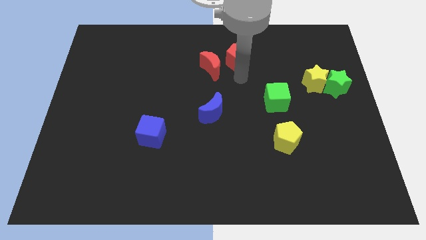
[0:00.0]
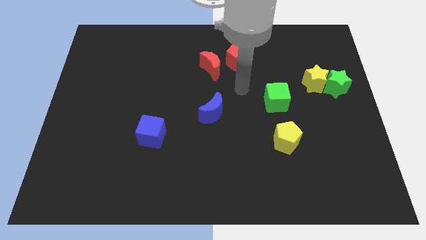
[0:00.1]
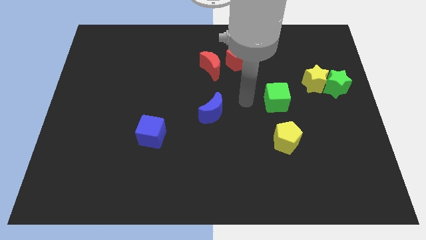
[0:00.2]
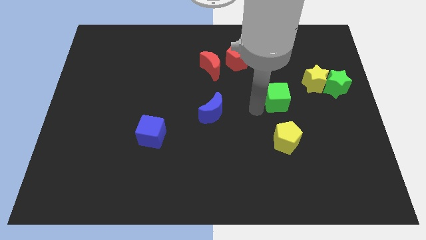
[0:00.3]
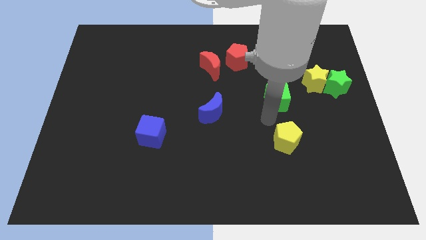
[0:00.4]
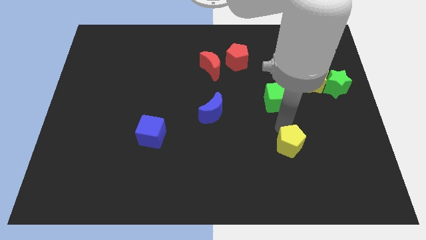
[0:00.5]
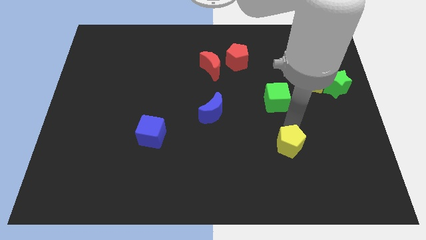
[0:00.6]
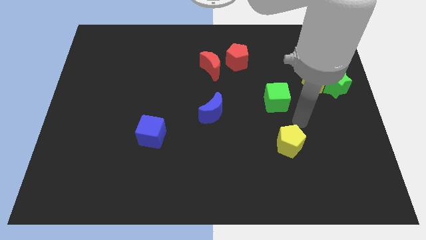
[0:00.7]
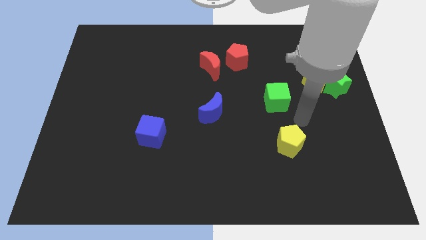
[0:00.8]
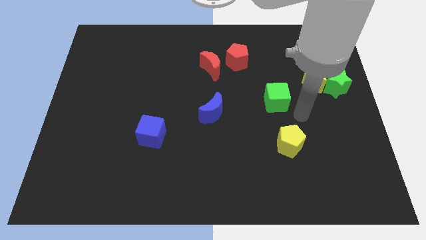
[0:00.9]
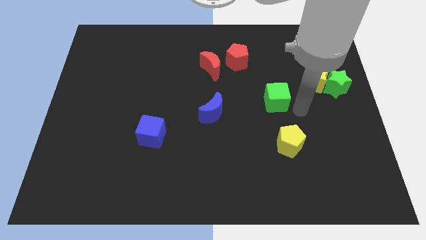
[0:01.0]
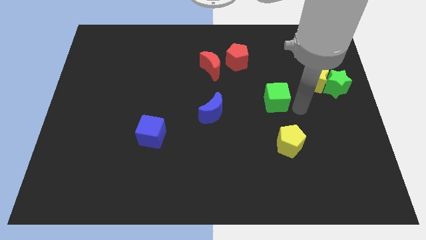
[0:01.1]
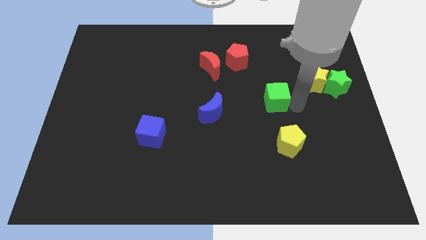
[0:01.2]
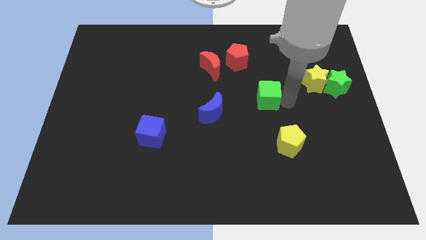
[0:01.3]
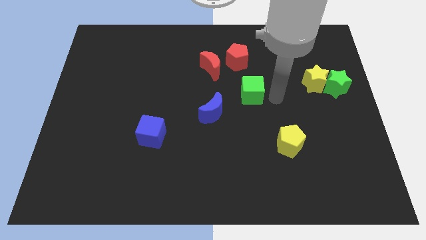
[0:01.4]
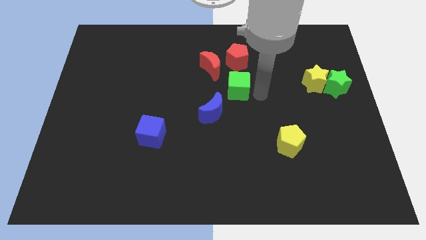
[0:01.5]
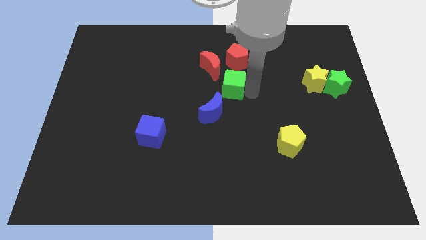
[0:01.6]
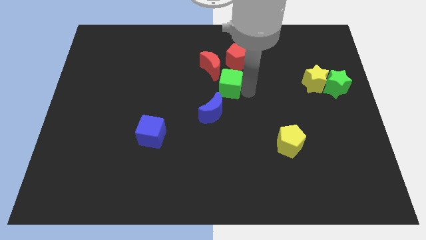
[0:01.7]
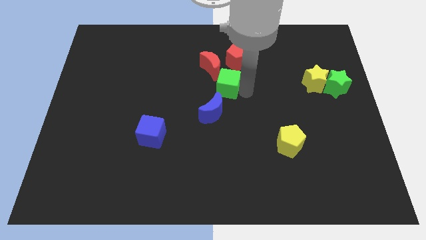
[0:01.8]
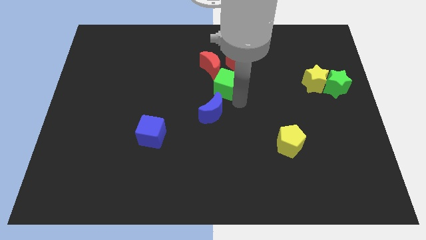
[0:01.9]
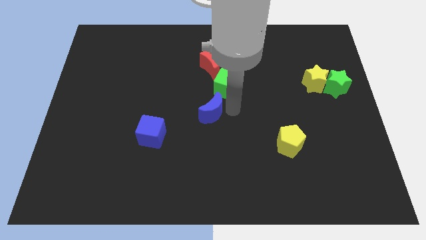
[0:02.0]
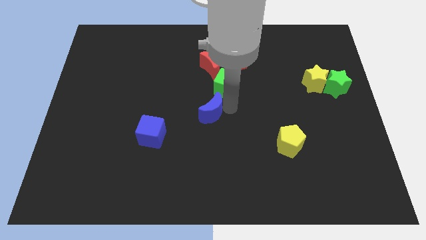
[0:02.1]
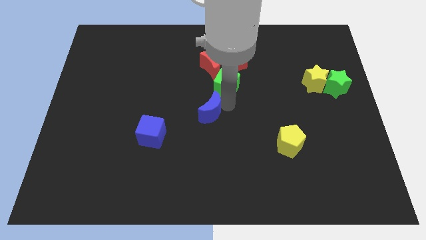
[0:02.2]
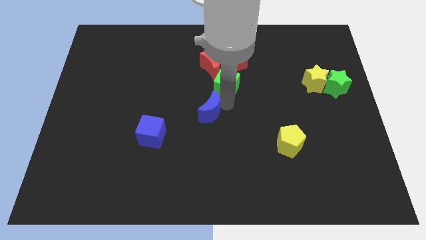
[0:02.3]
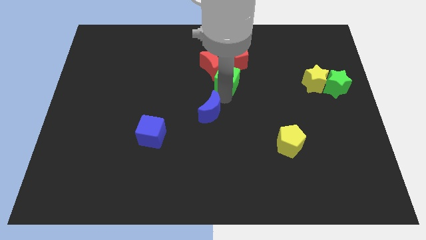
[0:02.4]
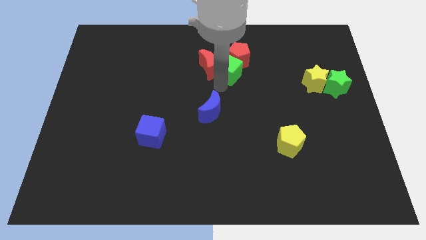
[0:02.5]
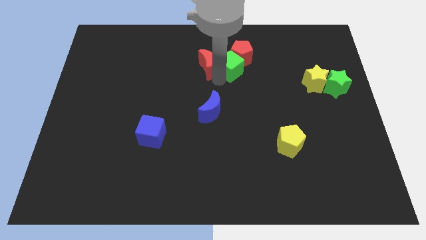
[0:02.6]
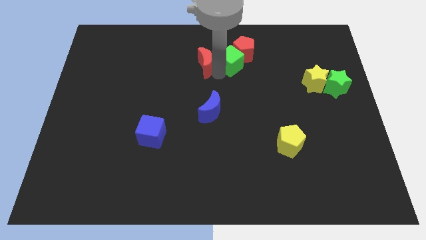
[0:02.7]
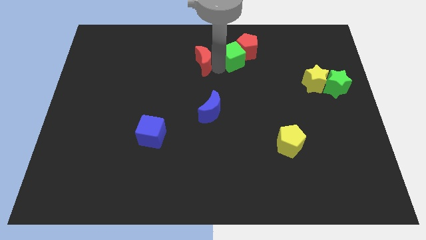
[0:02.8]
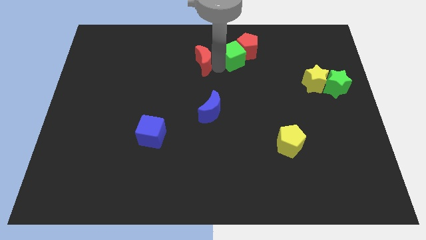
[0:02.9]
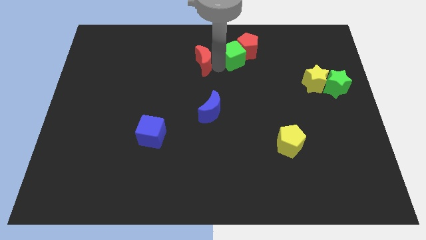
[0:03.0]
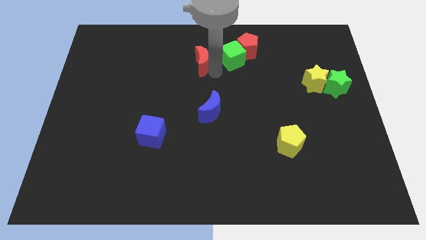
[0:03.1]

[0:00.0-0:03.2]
put green cube in between the red blocks

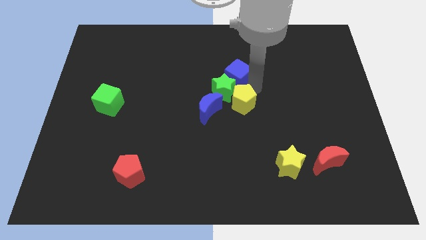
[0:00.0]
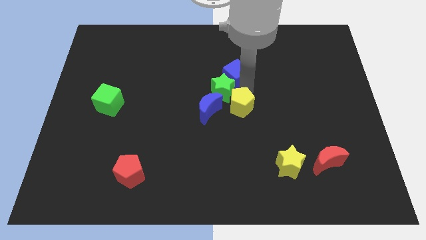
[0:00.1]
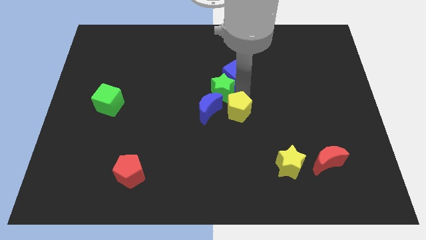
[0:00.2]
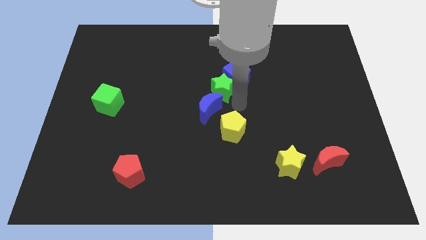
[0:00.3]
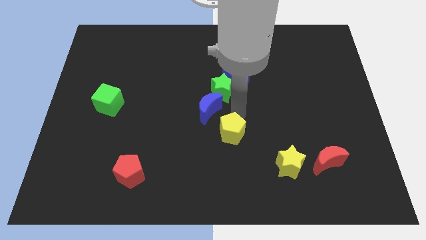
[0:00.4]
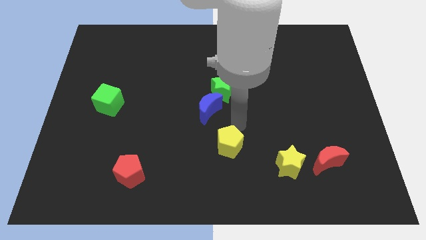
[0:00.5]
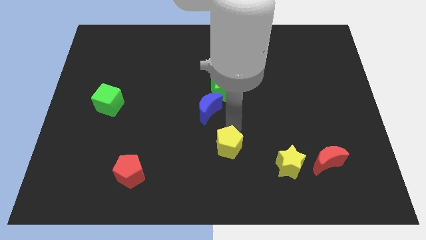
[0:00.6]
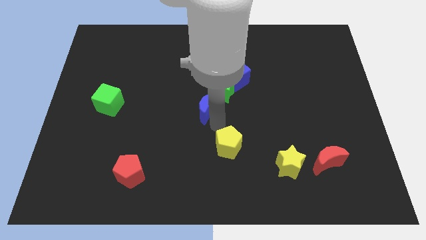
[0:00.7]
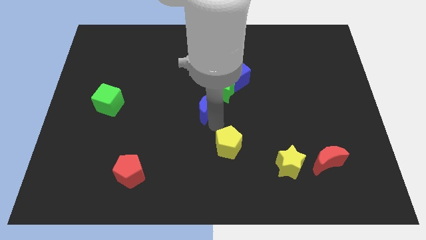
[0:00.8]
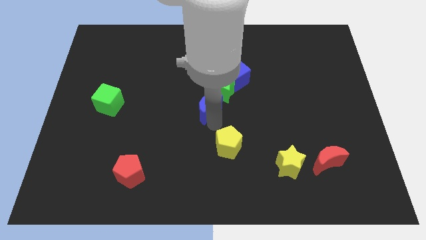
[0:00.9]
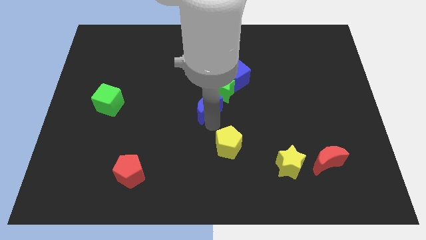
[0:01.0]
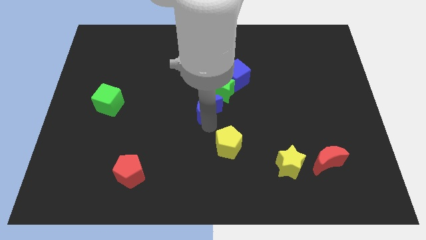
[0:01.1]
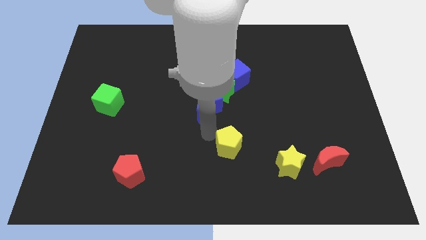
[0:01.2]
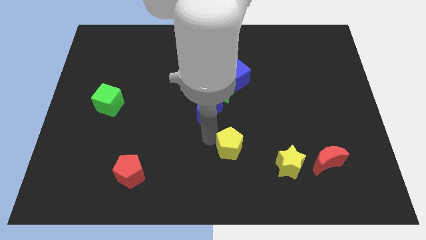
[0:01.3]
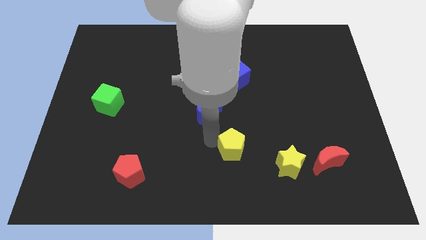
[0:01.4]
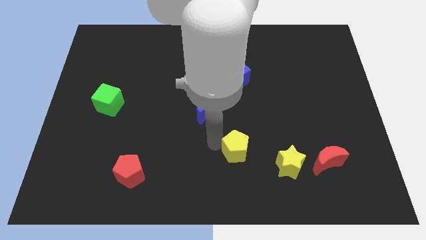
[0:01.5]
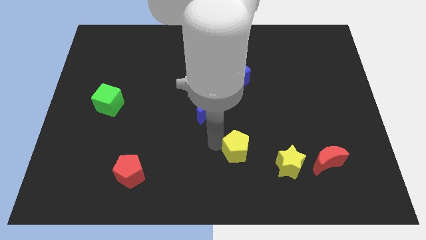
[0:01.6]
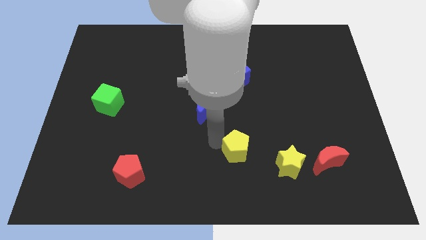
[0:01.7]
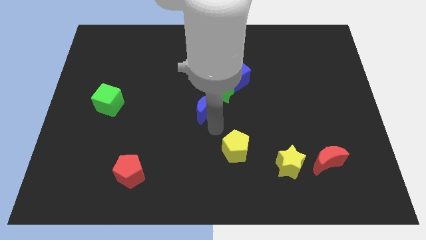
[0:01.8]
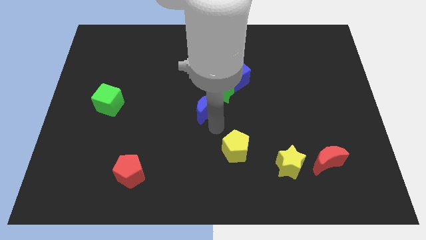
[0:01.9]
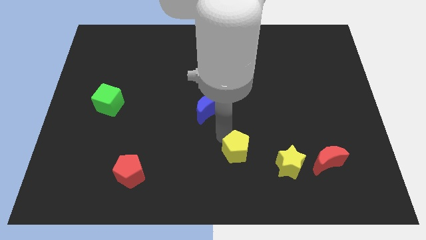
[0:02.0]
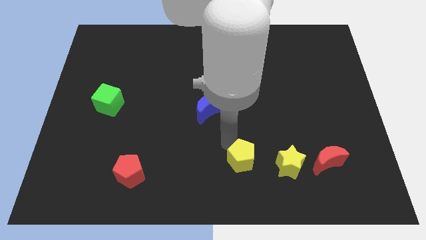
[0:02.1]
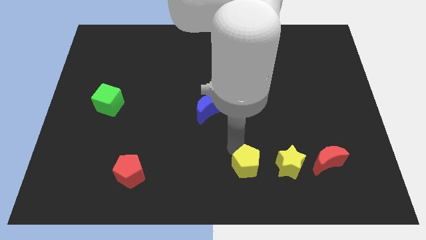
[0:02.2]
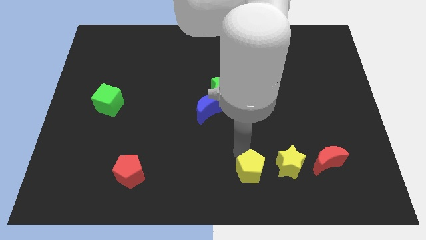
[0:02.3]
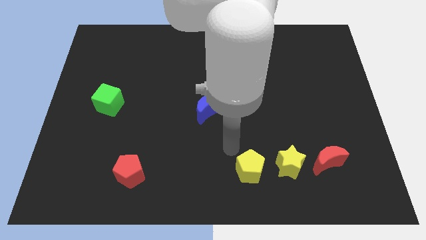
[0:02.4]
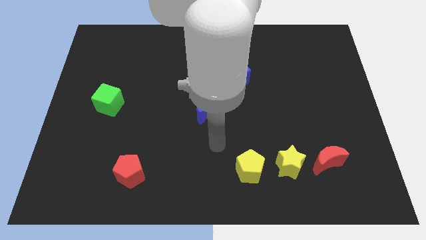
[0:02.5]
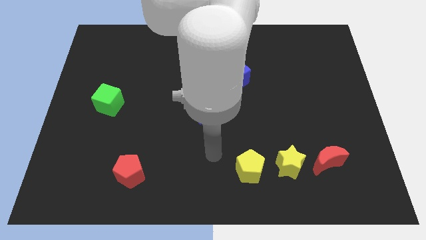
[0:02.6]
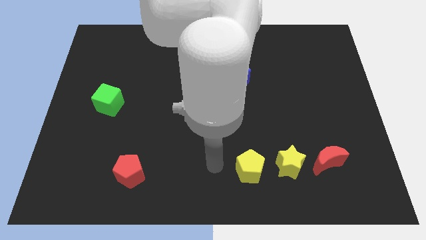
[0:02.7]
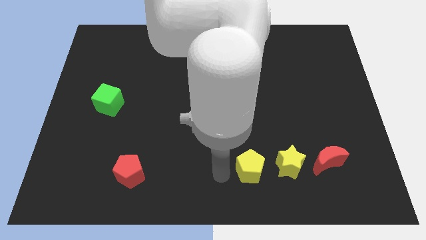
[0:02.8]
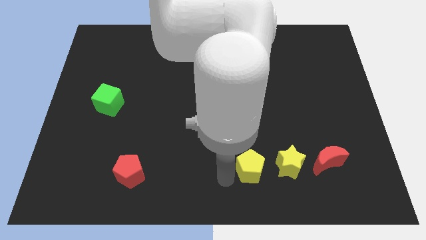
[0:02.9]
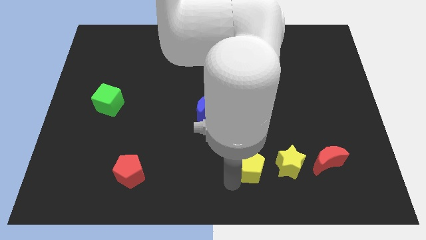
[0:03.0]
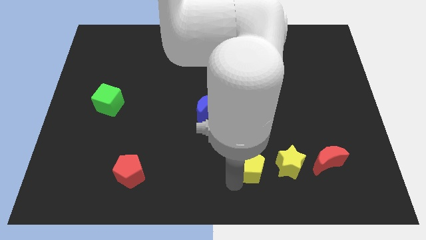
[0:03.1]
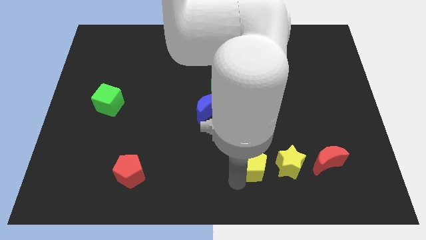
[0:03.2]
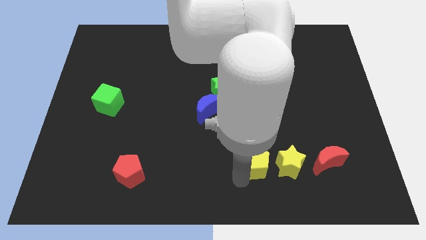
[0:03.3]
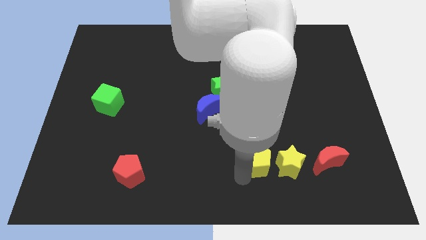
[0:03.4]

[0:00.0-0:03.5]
push the yellow pentagon to the left side of the yellow star

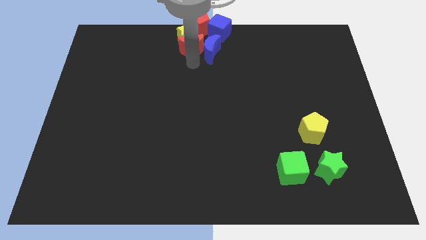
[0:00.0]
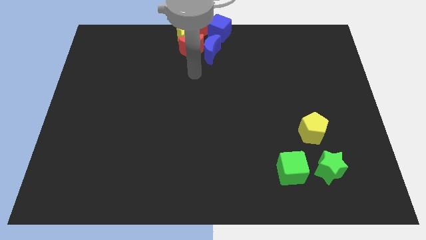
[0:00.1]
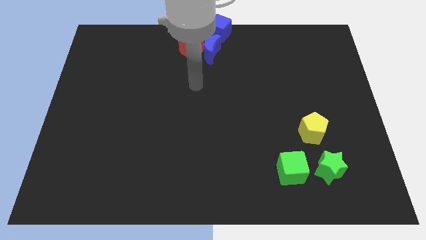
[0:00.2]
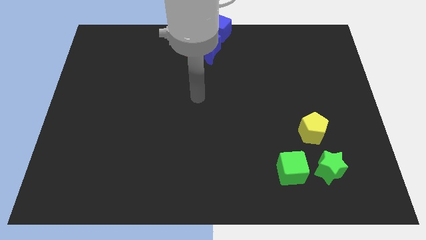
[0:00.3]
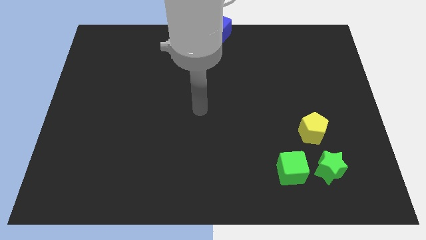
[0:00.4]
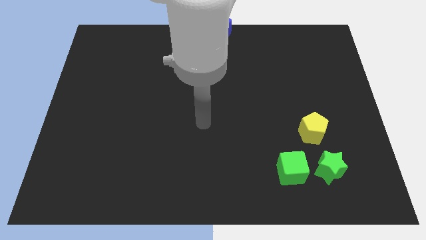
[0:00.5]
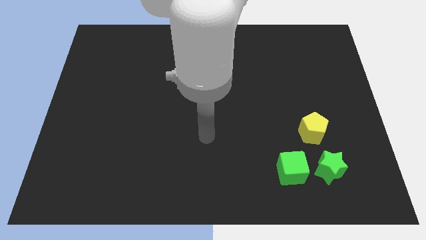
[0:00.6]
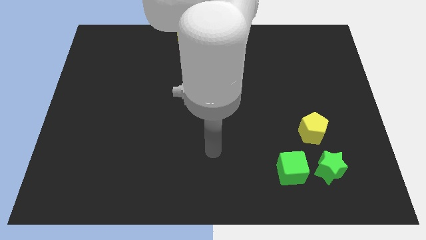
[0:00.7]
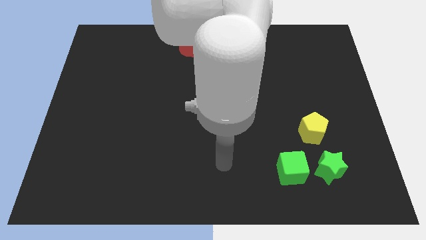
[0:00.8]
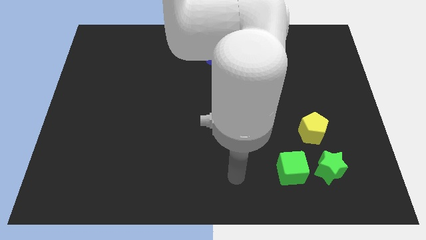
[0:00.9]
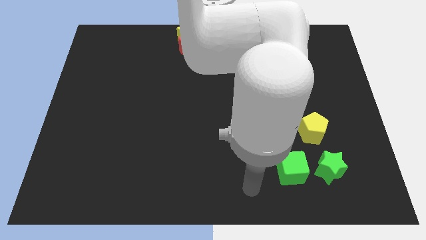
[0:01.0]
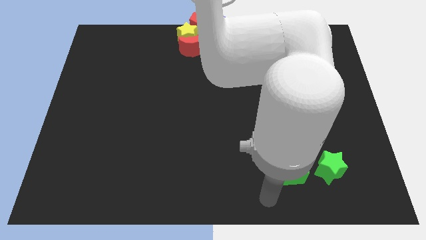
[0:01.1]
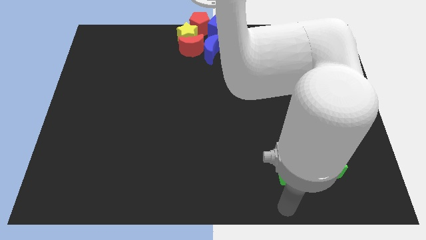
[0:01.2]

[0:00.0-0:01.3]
point your arm at the bottom of the green cube

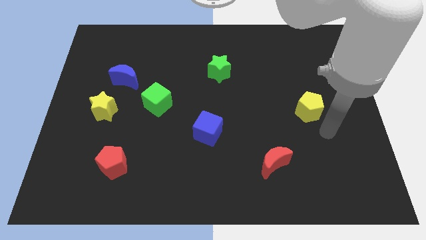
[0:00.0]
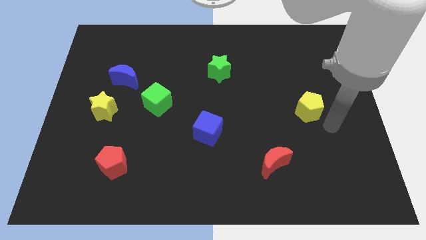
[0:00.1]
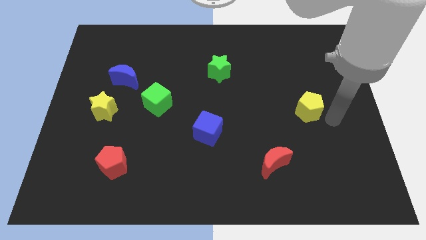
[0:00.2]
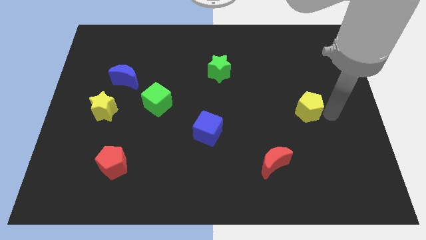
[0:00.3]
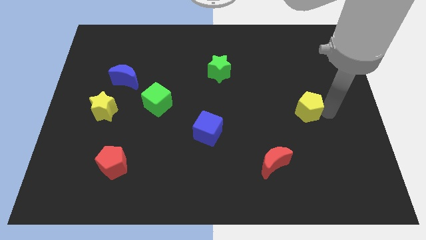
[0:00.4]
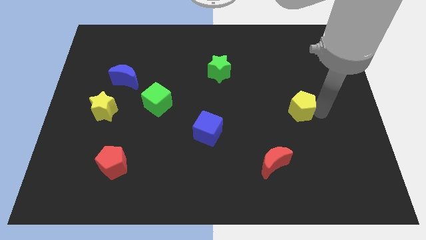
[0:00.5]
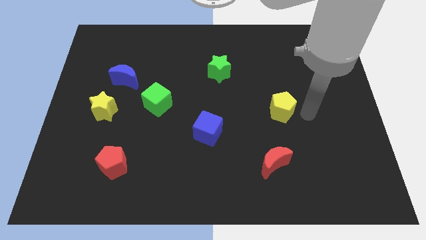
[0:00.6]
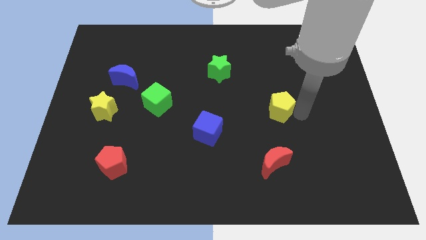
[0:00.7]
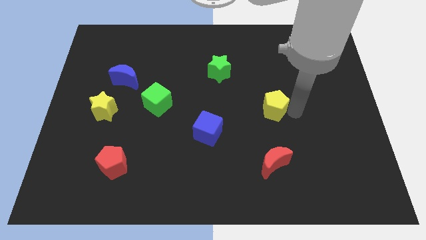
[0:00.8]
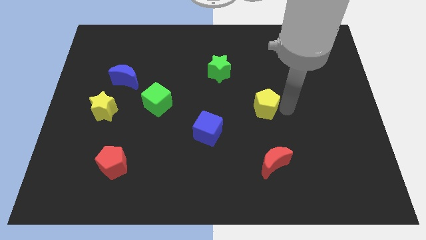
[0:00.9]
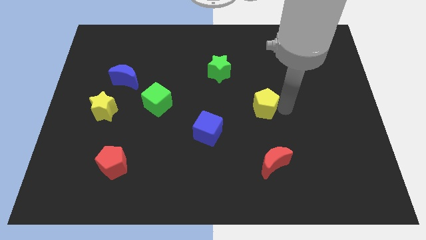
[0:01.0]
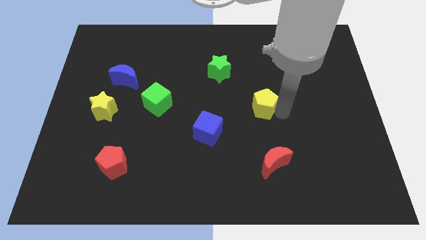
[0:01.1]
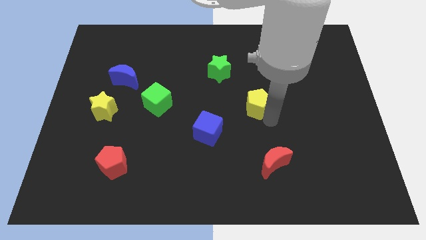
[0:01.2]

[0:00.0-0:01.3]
slide the yellow pentagon towards the center

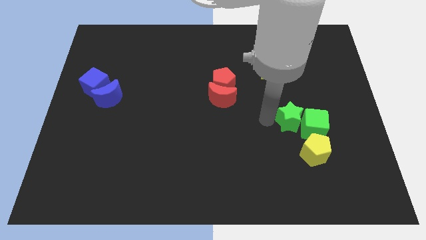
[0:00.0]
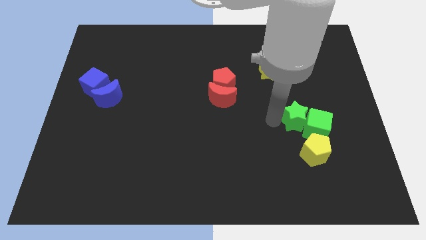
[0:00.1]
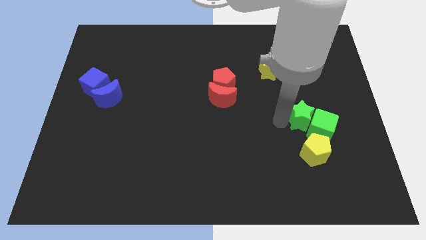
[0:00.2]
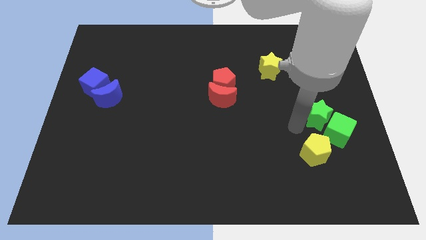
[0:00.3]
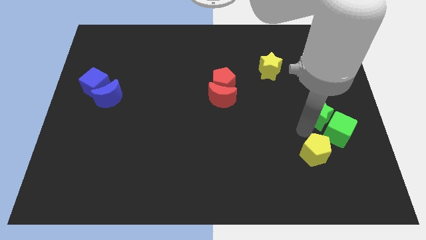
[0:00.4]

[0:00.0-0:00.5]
push the green star to the right center
